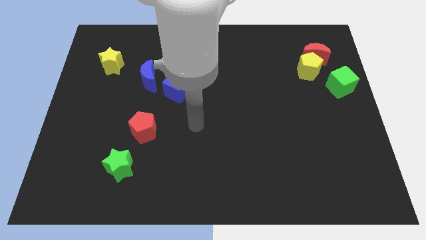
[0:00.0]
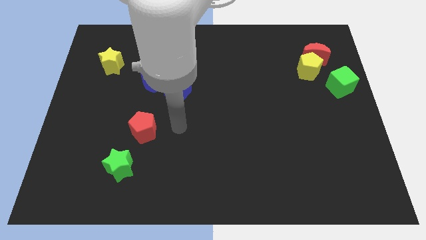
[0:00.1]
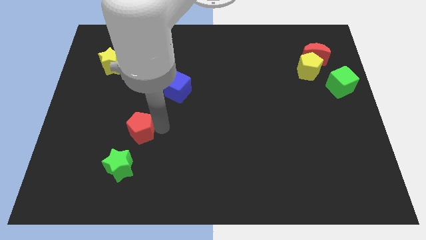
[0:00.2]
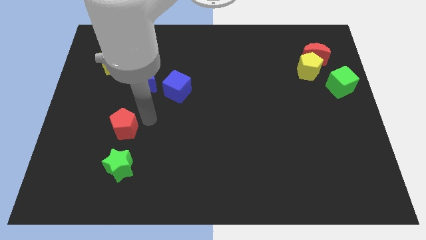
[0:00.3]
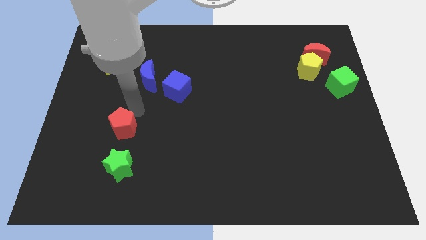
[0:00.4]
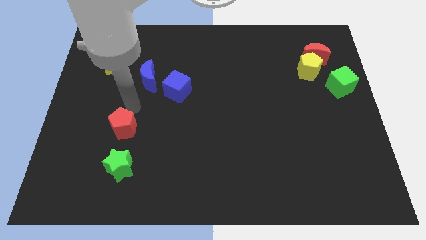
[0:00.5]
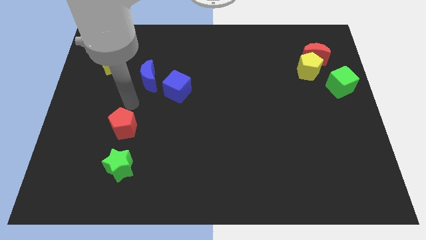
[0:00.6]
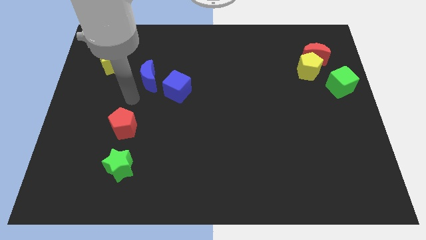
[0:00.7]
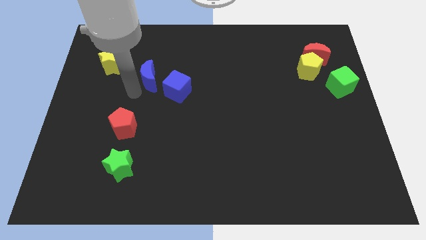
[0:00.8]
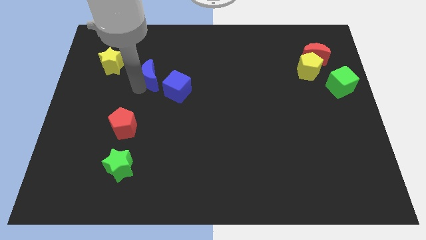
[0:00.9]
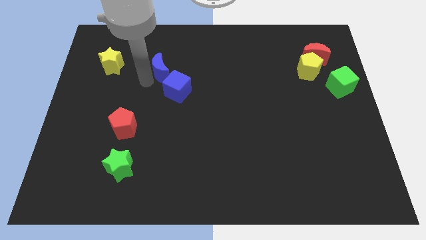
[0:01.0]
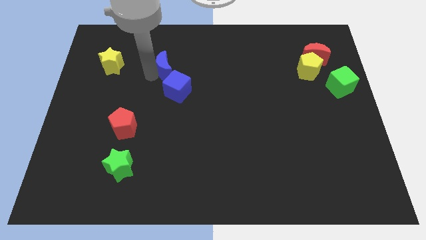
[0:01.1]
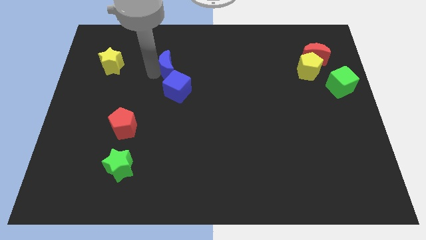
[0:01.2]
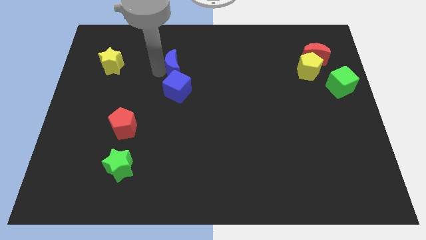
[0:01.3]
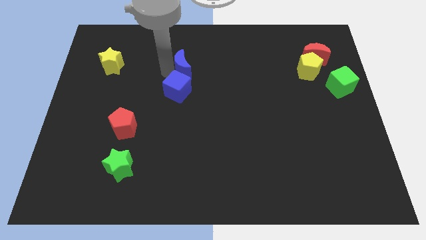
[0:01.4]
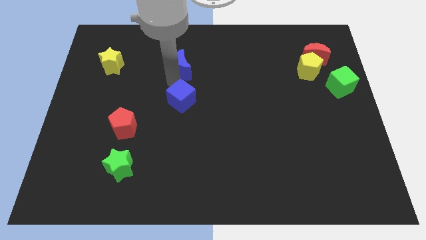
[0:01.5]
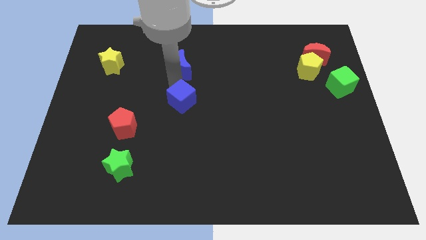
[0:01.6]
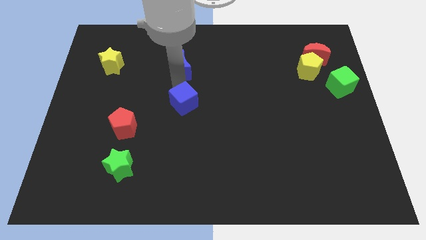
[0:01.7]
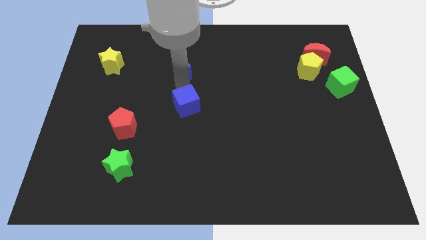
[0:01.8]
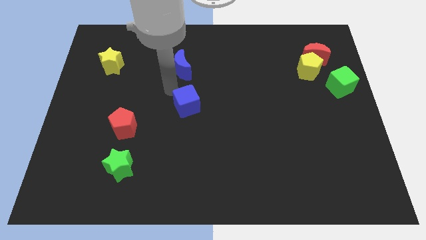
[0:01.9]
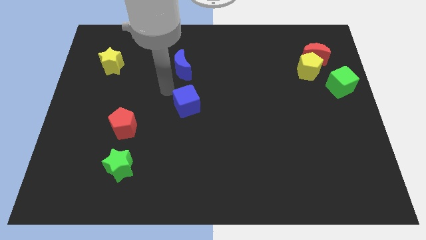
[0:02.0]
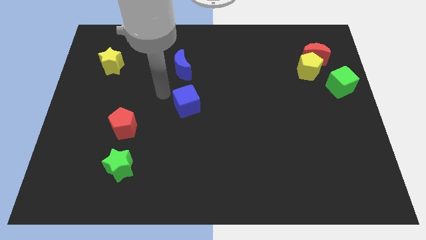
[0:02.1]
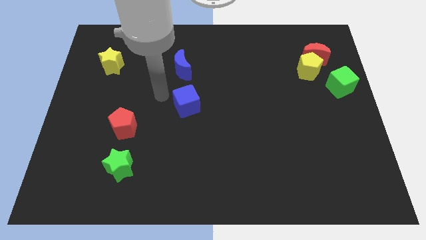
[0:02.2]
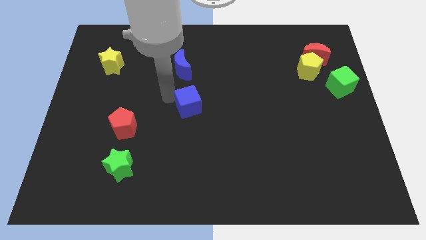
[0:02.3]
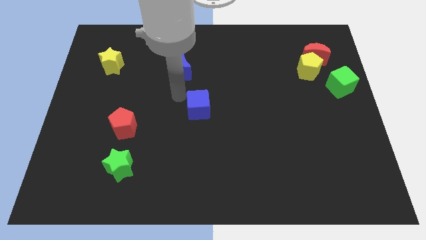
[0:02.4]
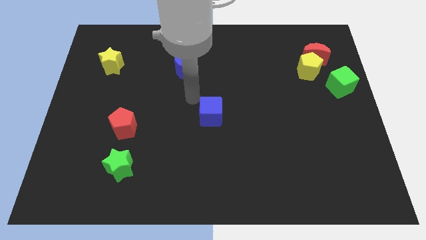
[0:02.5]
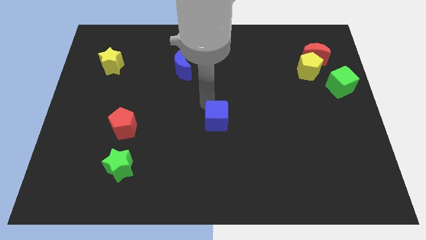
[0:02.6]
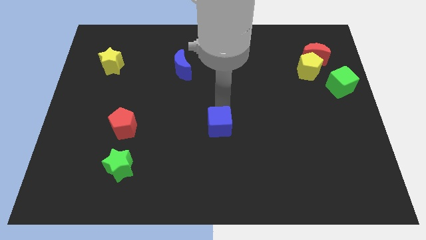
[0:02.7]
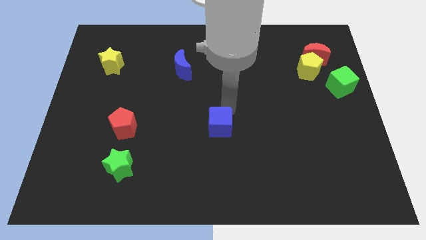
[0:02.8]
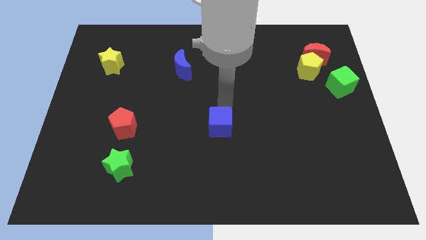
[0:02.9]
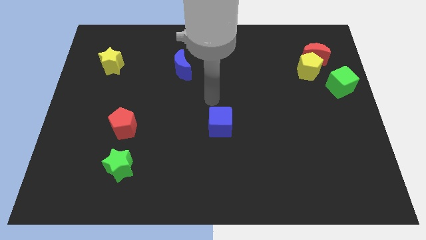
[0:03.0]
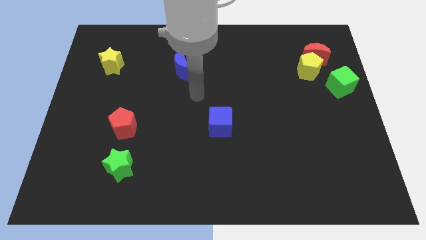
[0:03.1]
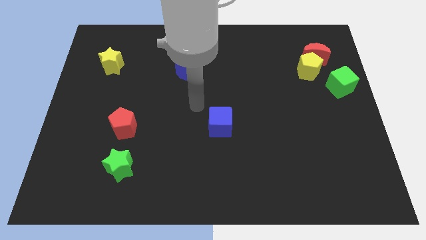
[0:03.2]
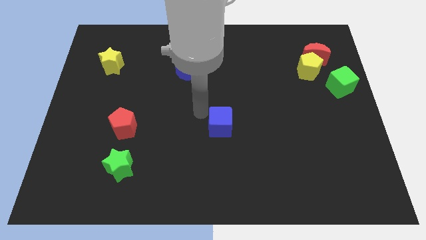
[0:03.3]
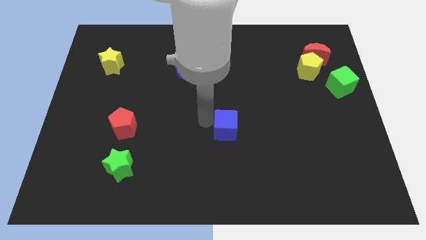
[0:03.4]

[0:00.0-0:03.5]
place the blue cube parallel to red pentagon

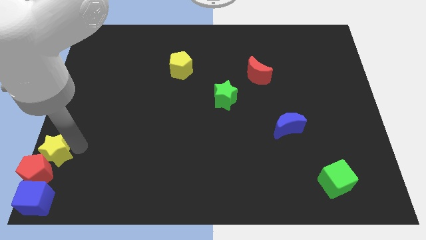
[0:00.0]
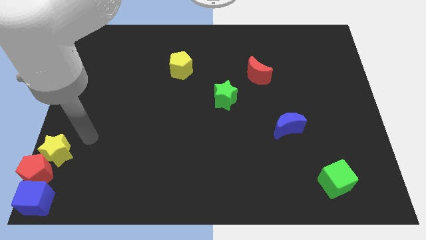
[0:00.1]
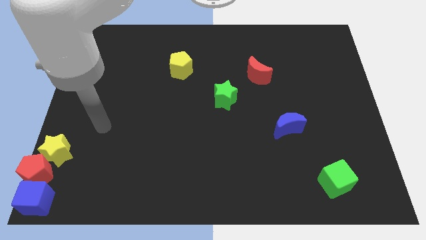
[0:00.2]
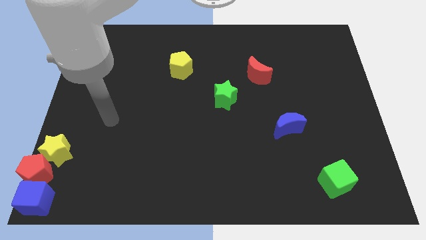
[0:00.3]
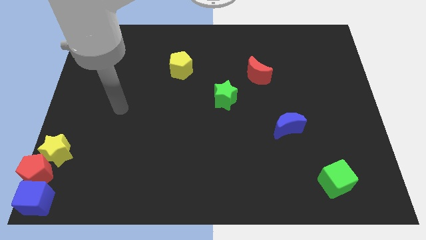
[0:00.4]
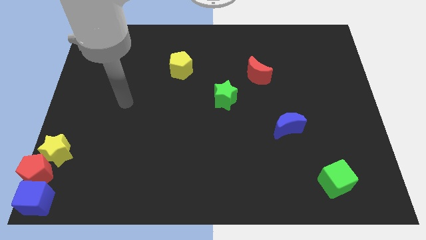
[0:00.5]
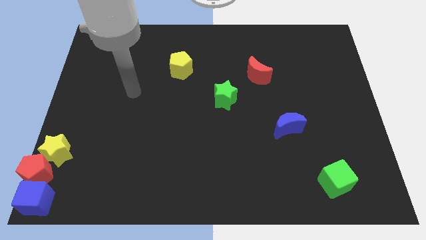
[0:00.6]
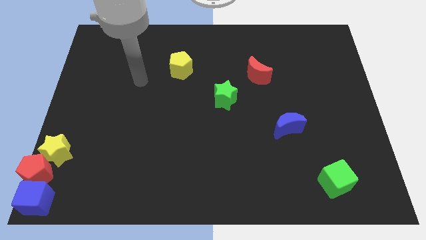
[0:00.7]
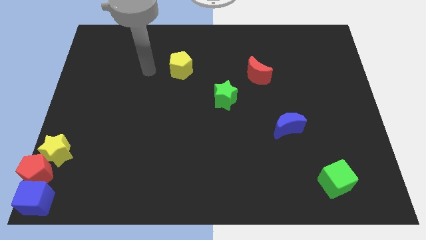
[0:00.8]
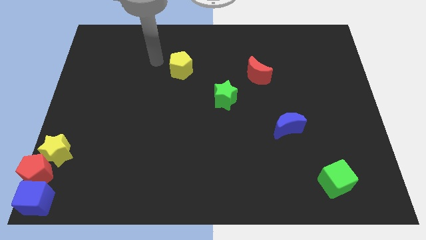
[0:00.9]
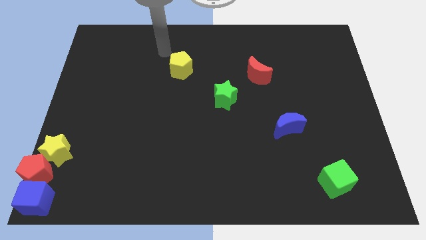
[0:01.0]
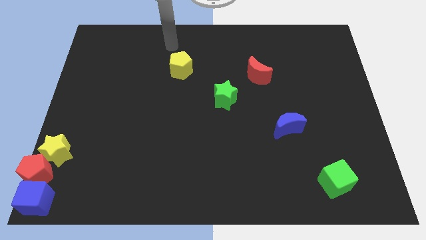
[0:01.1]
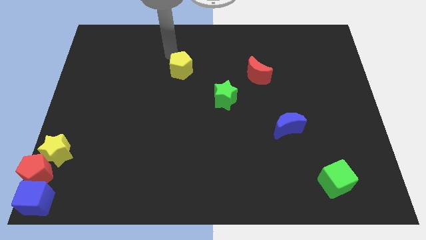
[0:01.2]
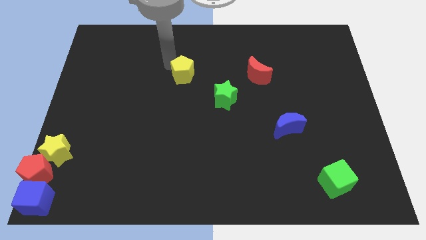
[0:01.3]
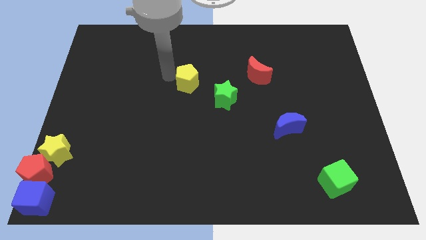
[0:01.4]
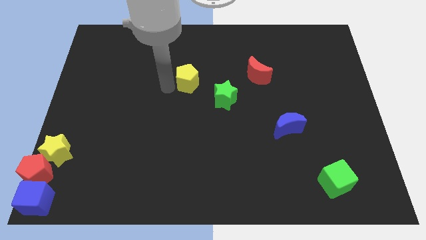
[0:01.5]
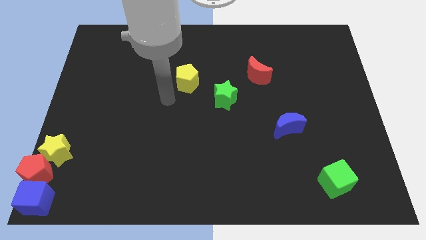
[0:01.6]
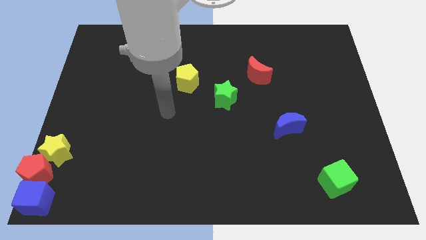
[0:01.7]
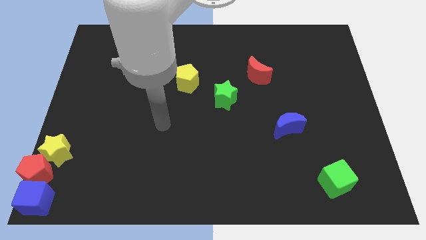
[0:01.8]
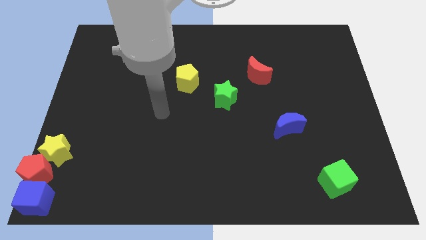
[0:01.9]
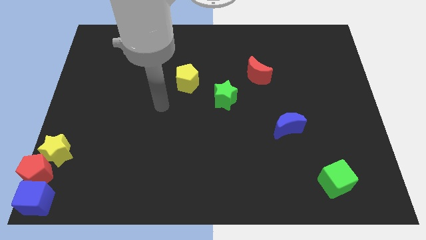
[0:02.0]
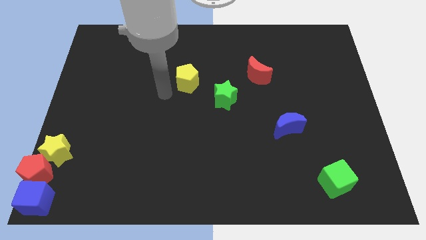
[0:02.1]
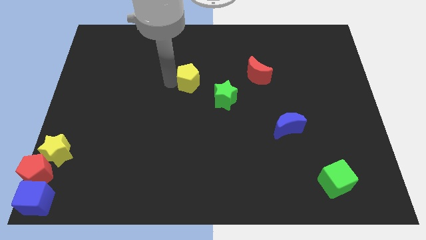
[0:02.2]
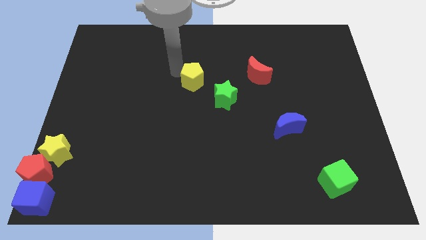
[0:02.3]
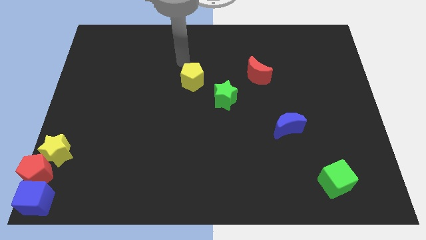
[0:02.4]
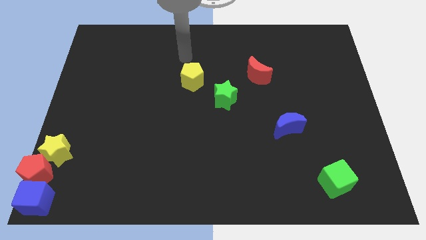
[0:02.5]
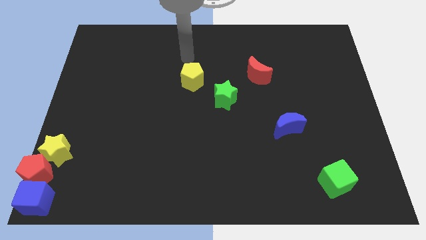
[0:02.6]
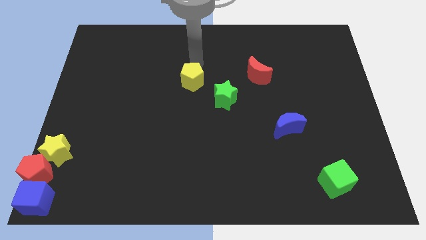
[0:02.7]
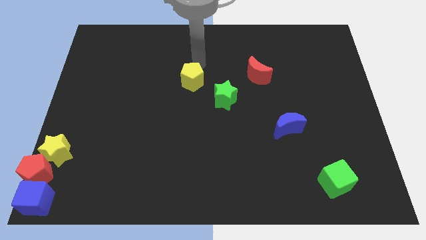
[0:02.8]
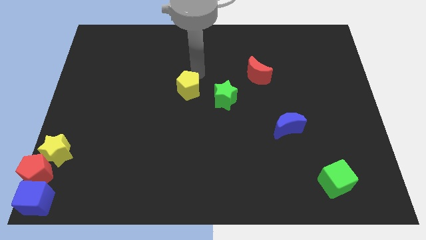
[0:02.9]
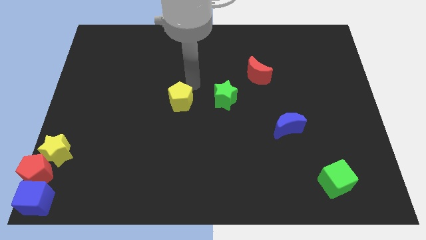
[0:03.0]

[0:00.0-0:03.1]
put the yellow pentagon horizontally at the left side of the green star

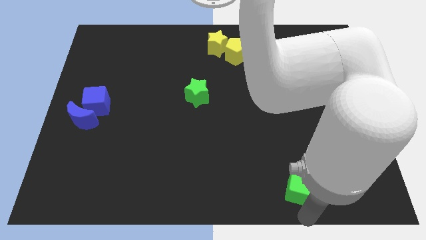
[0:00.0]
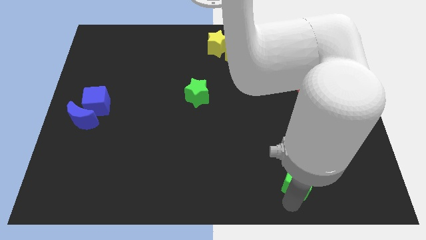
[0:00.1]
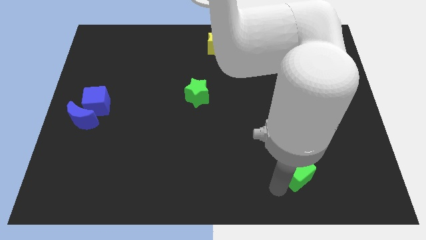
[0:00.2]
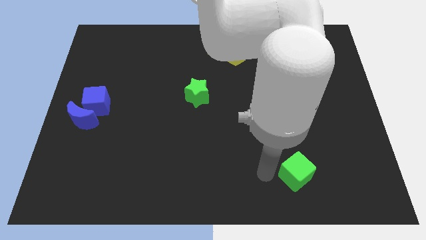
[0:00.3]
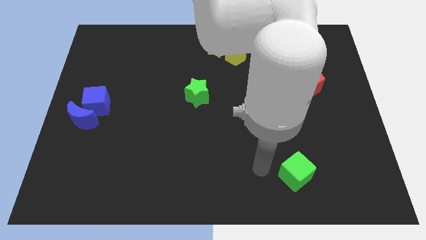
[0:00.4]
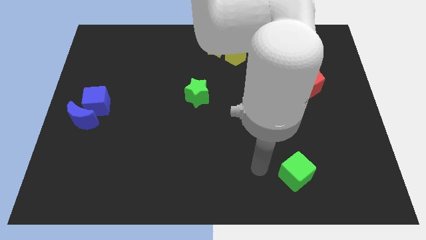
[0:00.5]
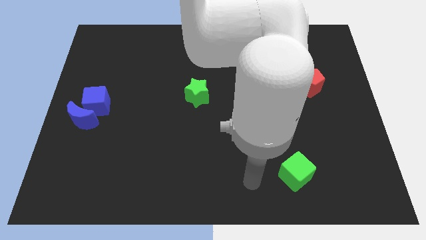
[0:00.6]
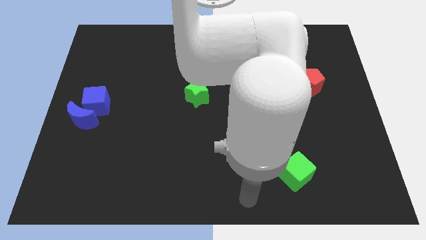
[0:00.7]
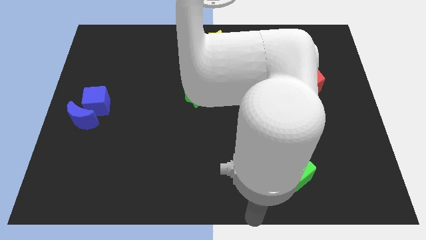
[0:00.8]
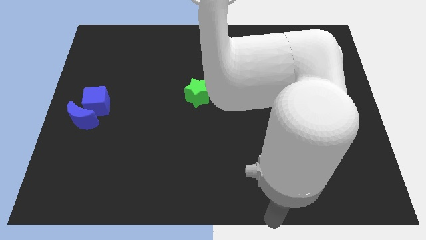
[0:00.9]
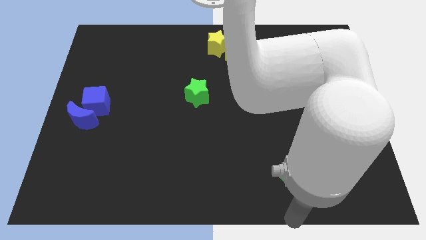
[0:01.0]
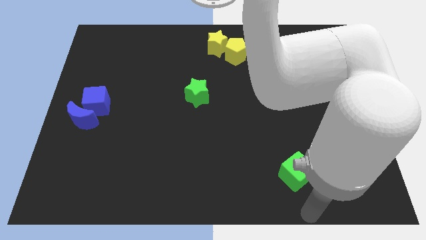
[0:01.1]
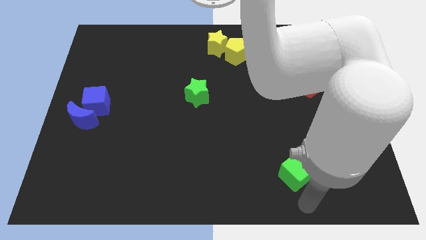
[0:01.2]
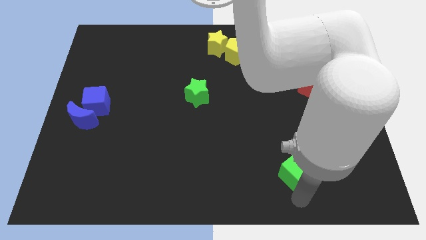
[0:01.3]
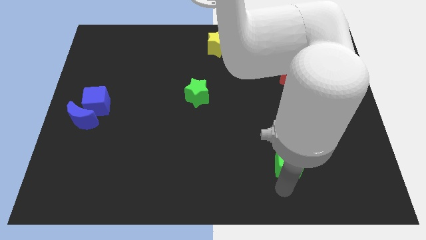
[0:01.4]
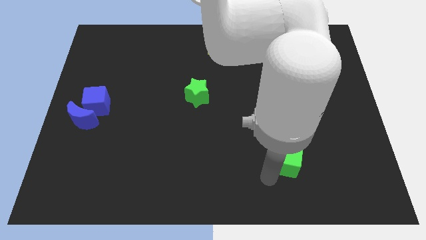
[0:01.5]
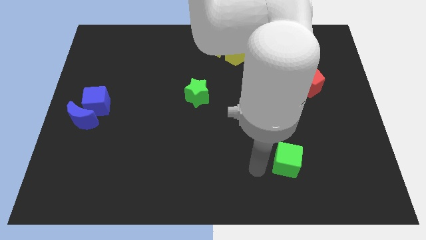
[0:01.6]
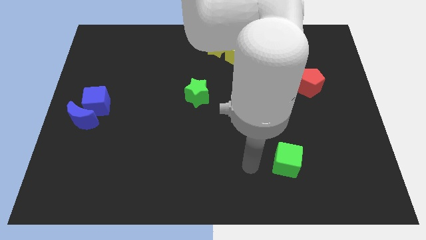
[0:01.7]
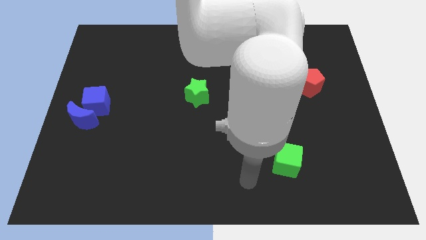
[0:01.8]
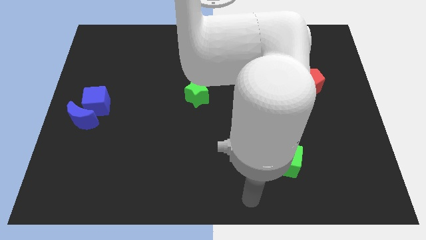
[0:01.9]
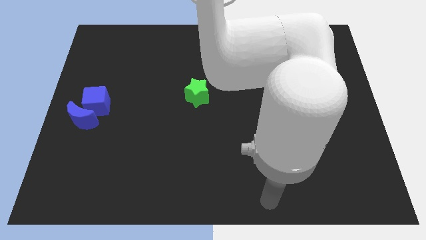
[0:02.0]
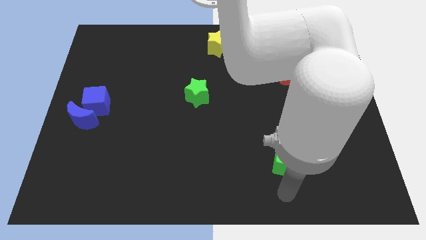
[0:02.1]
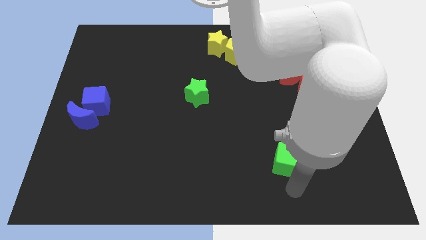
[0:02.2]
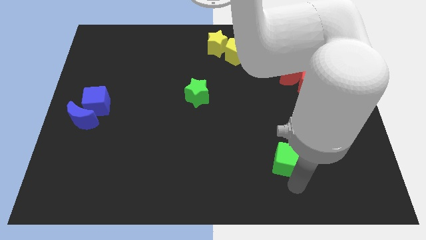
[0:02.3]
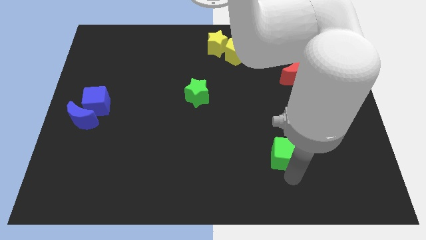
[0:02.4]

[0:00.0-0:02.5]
push the green above slightly upwards
